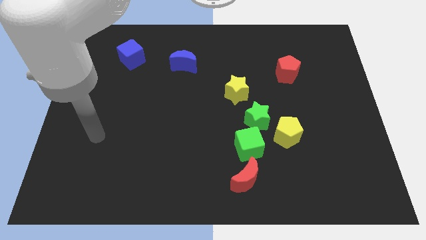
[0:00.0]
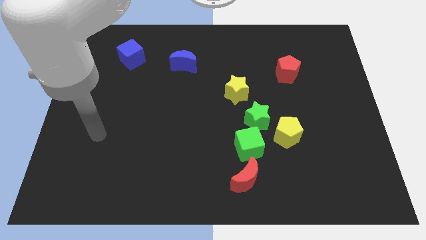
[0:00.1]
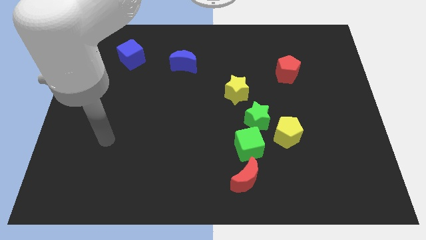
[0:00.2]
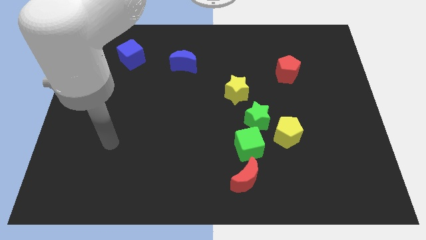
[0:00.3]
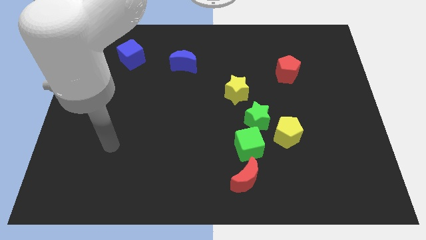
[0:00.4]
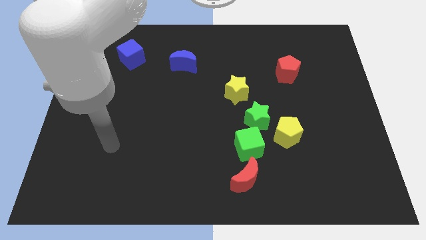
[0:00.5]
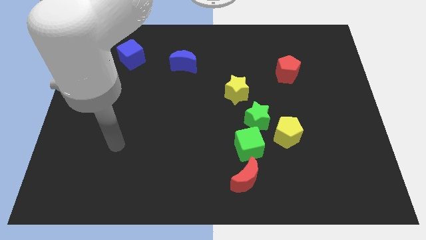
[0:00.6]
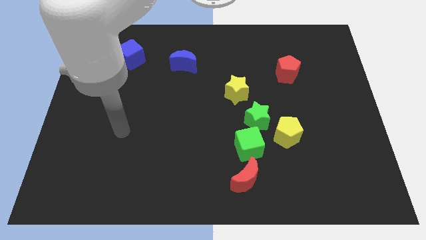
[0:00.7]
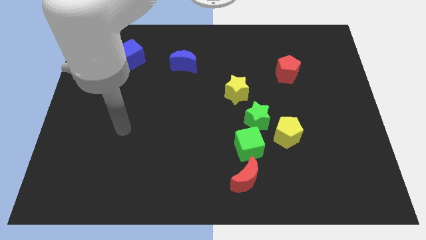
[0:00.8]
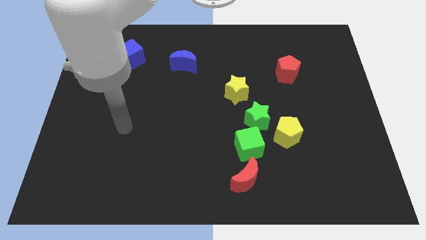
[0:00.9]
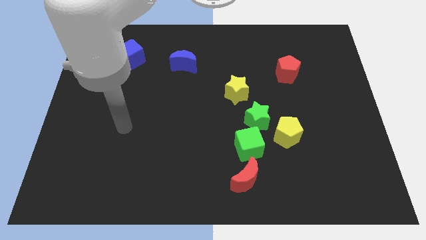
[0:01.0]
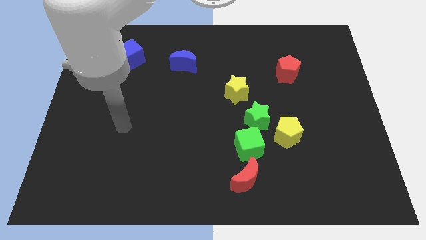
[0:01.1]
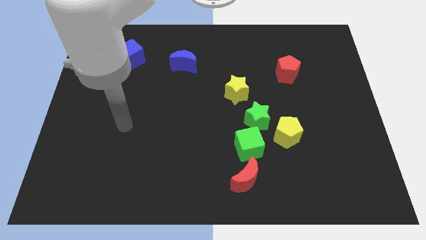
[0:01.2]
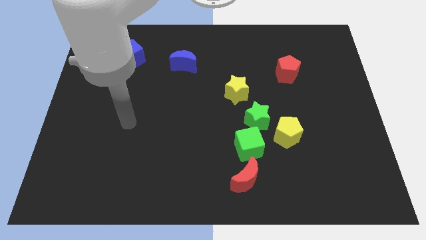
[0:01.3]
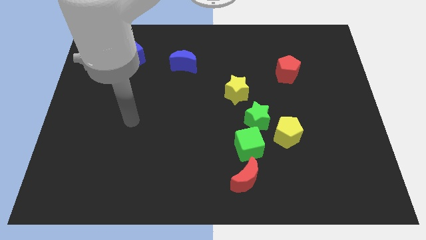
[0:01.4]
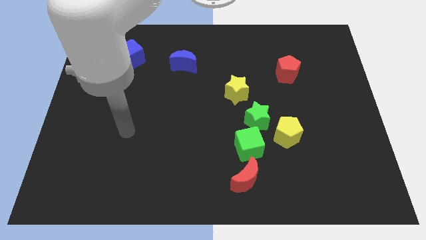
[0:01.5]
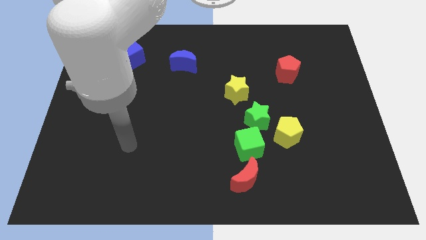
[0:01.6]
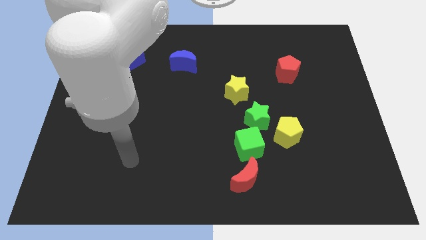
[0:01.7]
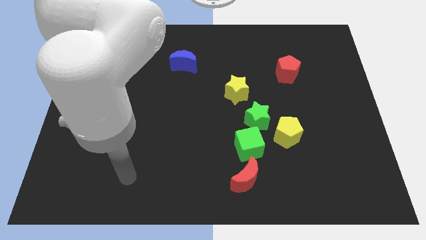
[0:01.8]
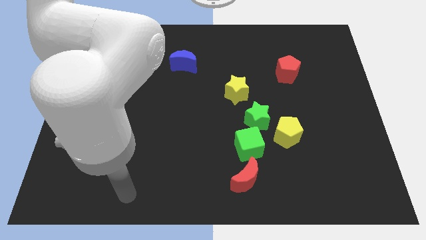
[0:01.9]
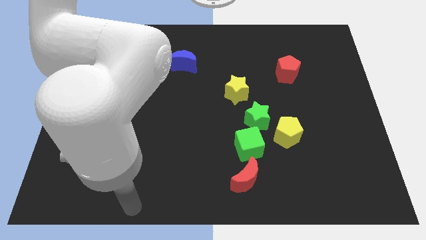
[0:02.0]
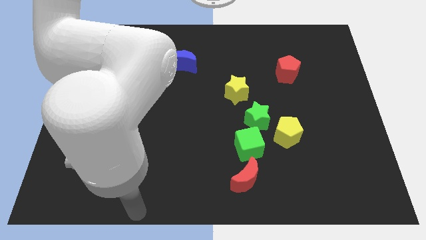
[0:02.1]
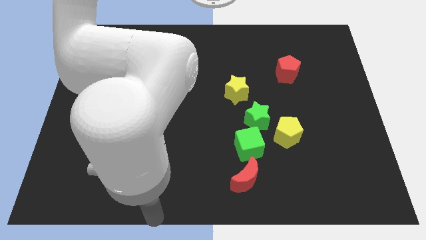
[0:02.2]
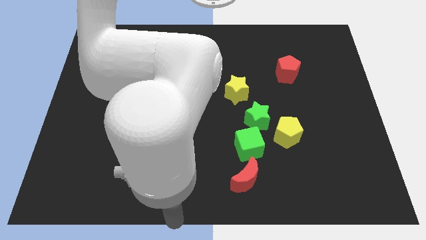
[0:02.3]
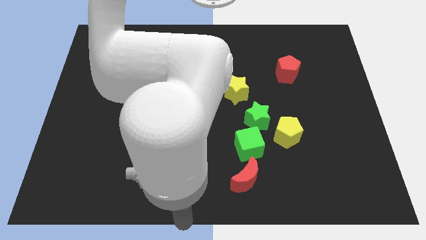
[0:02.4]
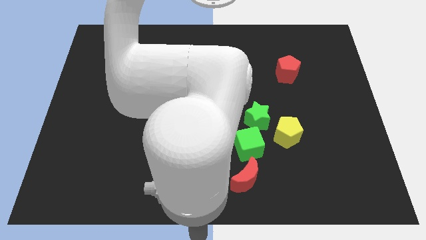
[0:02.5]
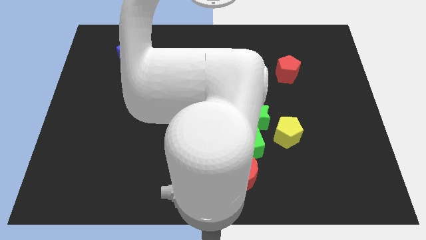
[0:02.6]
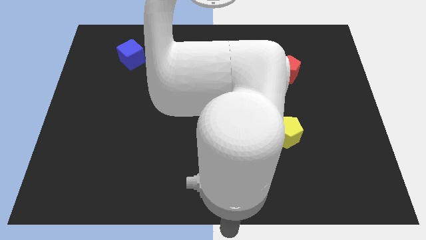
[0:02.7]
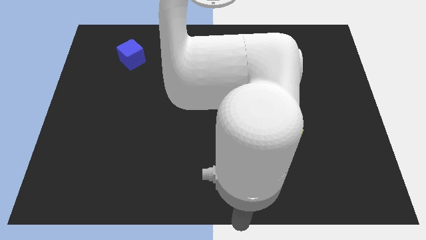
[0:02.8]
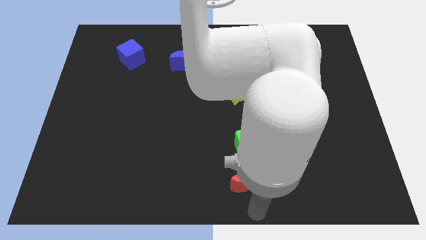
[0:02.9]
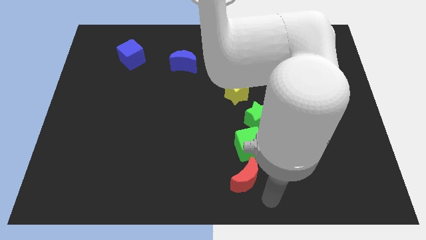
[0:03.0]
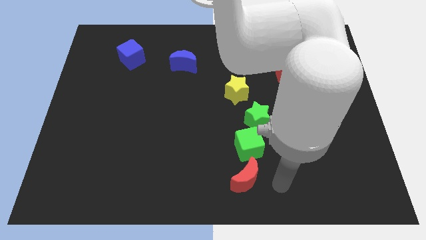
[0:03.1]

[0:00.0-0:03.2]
go and place your hand at the right of the red crescent

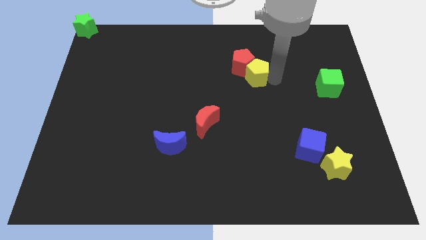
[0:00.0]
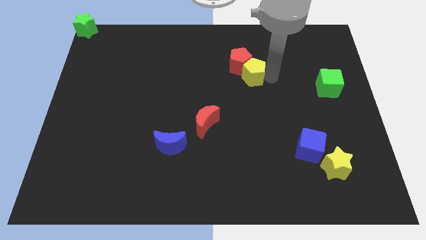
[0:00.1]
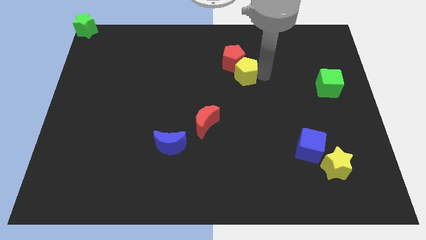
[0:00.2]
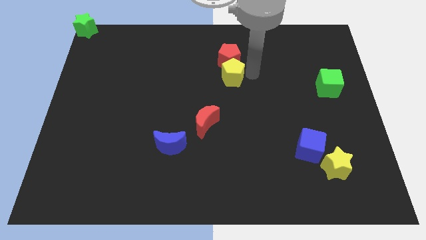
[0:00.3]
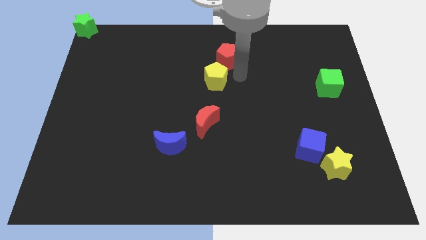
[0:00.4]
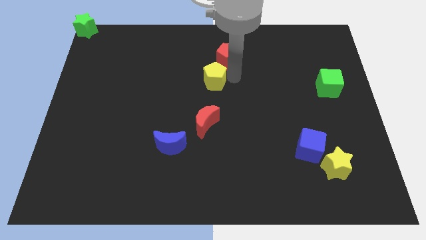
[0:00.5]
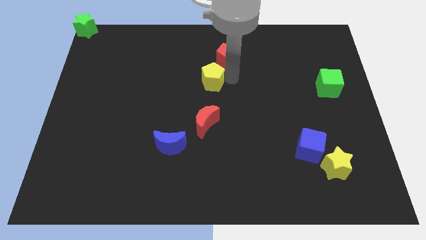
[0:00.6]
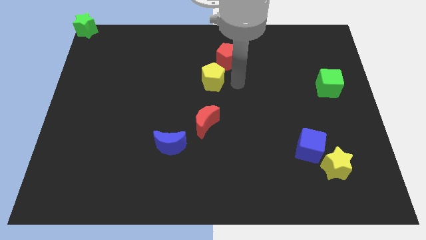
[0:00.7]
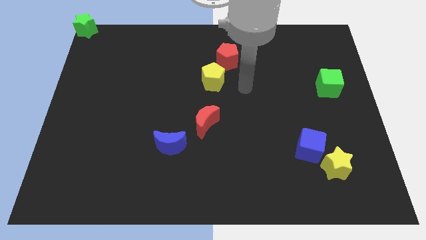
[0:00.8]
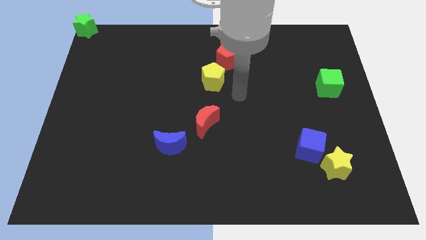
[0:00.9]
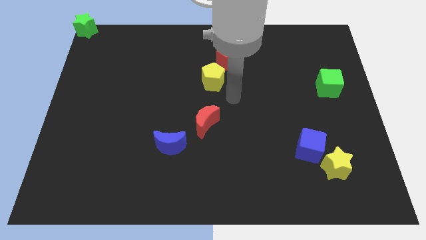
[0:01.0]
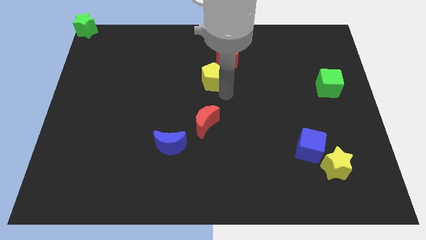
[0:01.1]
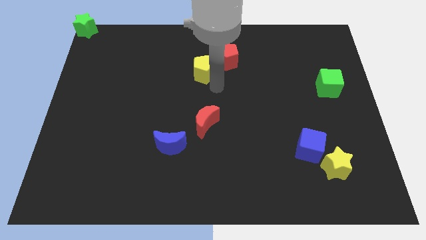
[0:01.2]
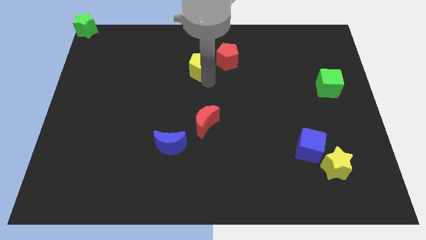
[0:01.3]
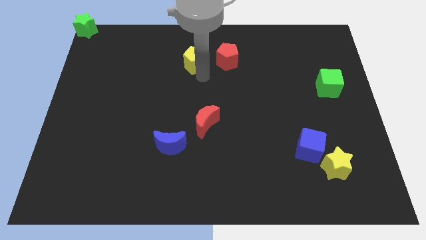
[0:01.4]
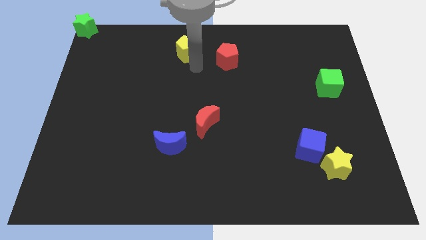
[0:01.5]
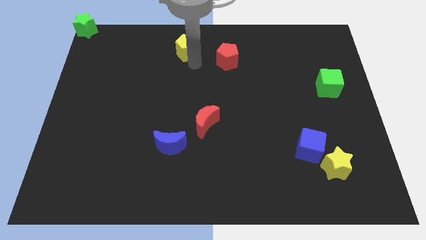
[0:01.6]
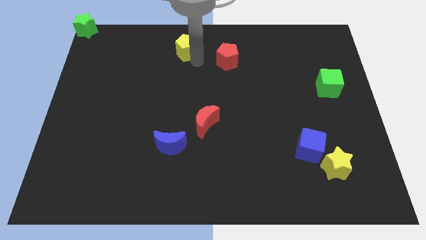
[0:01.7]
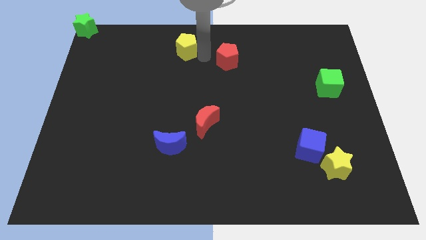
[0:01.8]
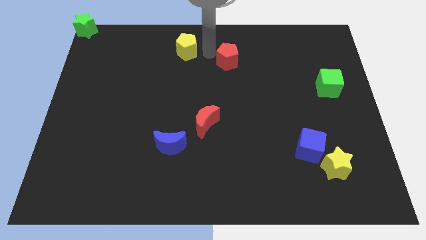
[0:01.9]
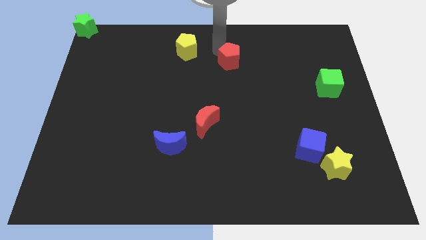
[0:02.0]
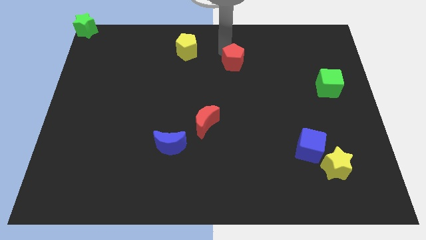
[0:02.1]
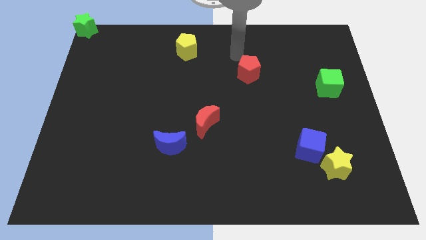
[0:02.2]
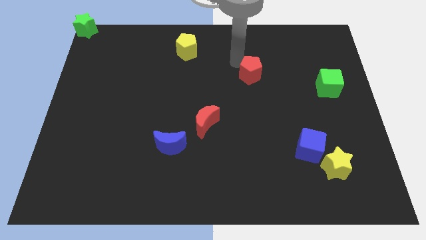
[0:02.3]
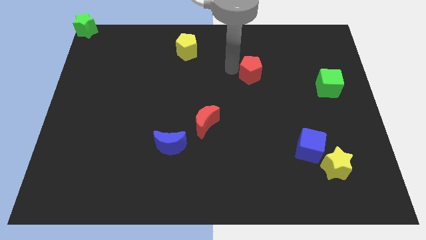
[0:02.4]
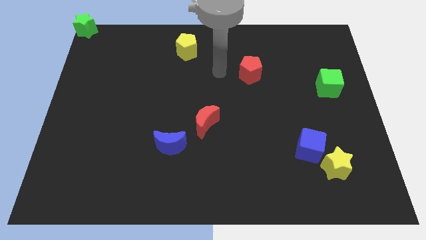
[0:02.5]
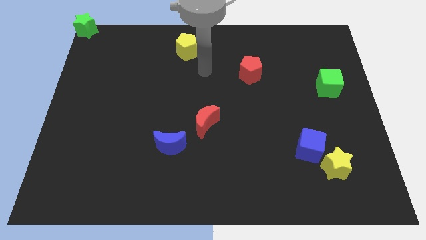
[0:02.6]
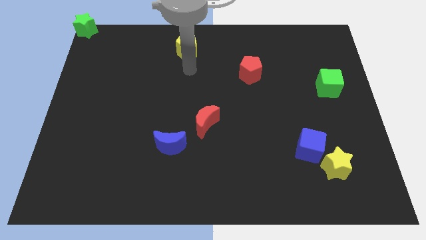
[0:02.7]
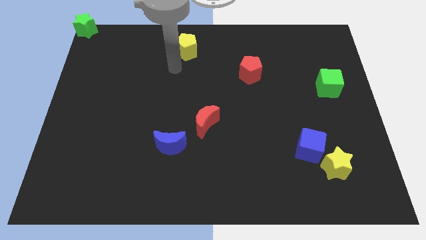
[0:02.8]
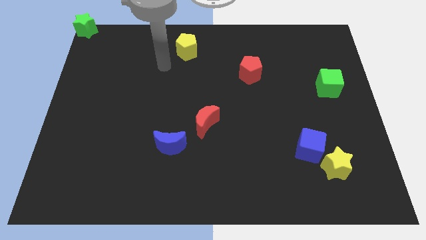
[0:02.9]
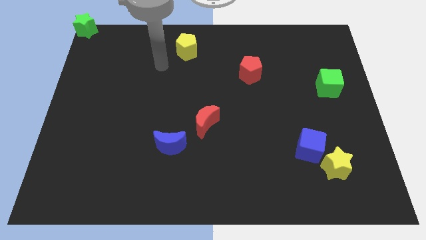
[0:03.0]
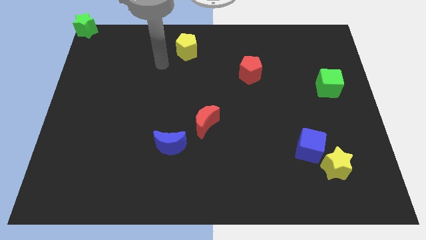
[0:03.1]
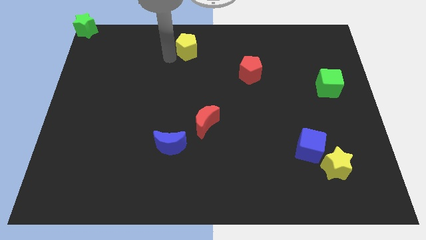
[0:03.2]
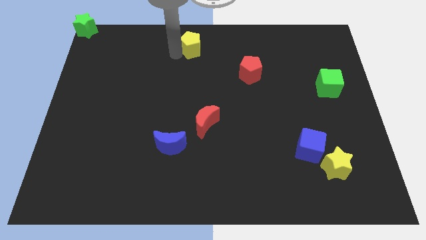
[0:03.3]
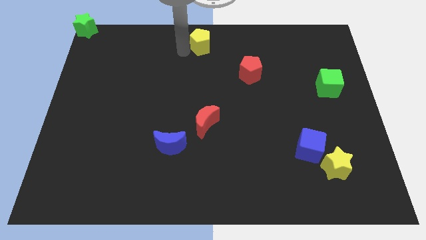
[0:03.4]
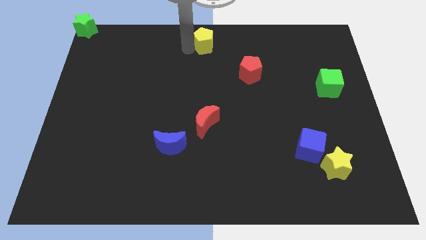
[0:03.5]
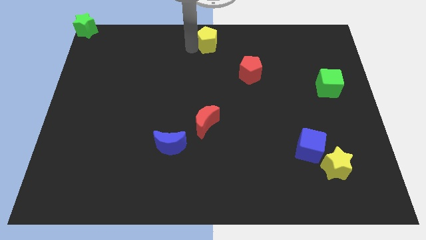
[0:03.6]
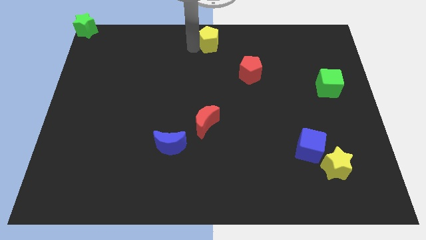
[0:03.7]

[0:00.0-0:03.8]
separate the red moon and yellow pentagon

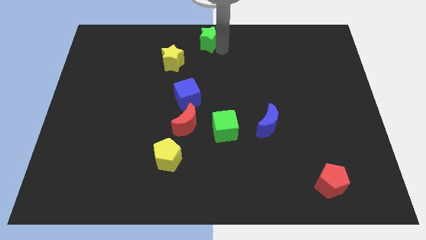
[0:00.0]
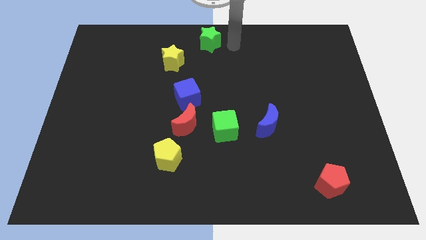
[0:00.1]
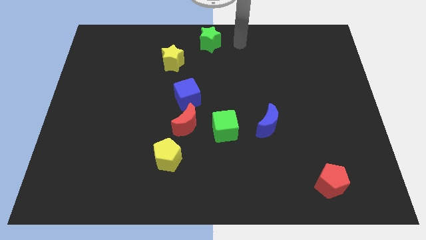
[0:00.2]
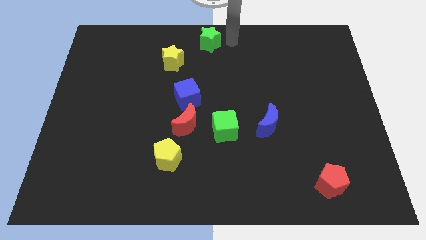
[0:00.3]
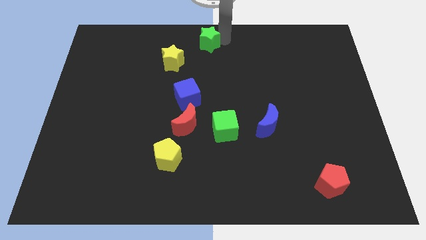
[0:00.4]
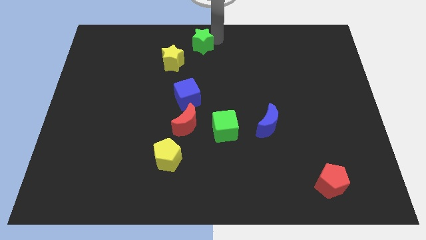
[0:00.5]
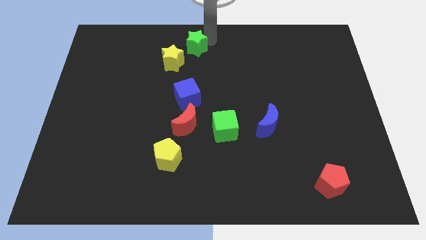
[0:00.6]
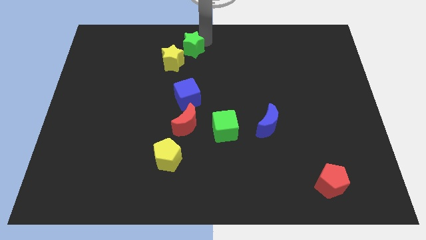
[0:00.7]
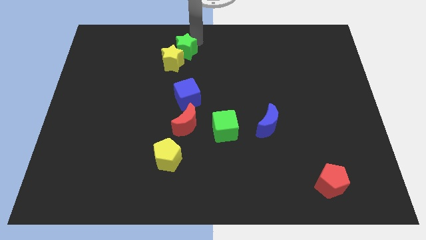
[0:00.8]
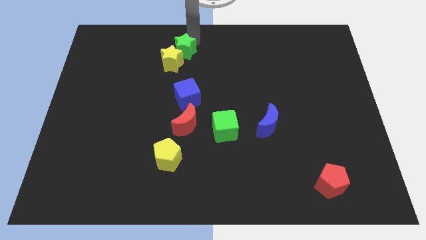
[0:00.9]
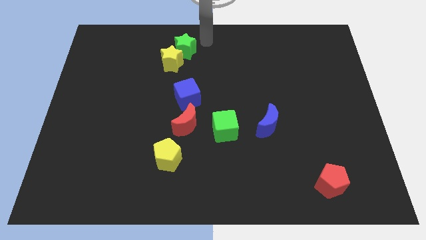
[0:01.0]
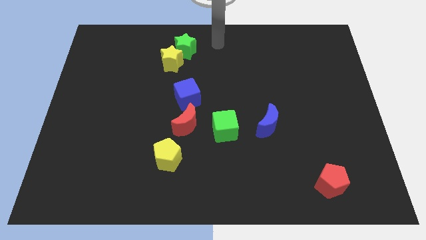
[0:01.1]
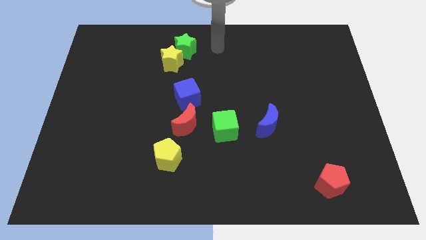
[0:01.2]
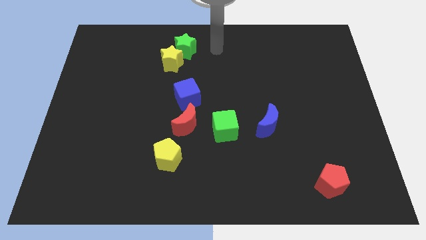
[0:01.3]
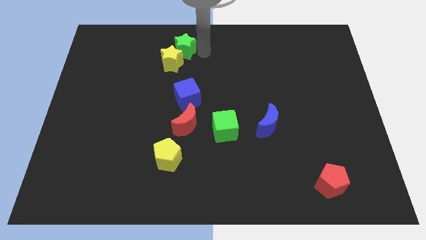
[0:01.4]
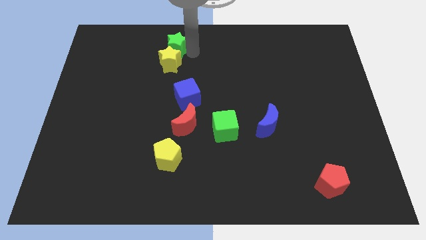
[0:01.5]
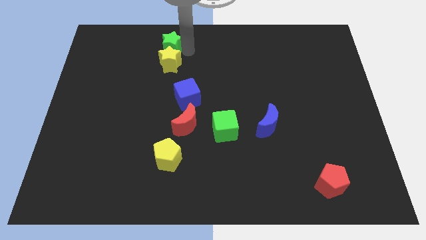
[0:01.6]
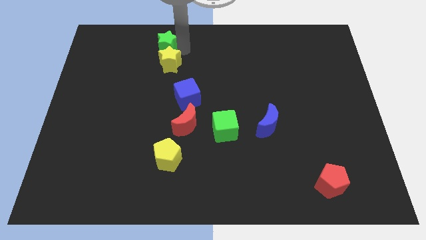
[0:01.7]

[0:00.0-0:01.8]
place the green star above the yellow star
